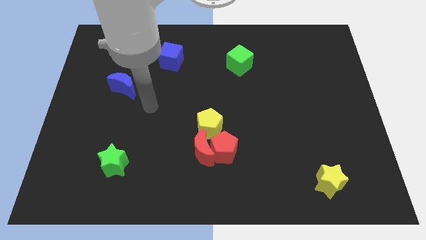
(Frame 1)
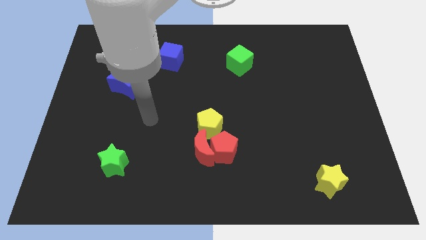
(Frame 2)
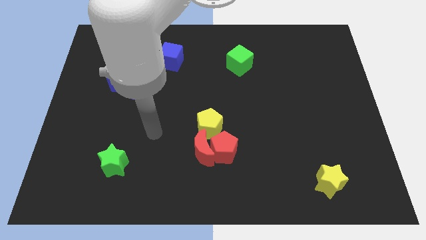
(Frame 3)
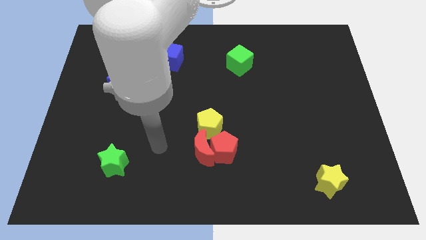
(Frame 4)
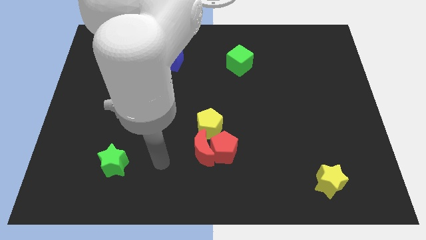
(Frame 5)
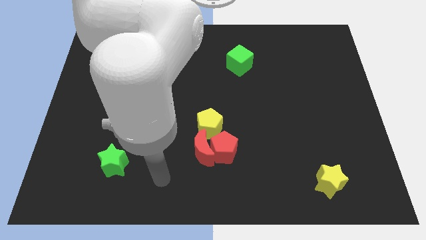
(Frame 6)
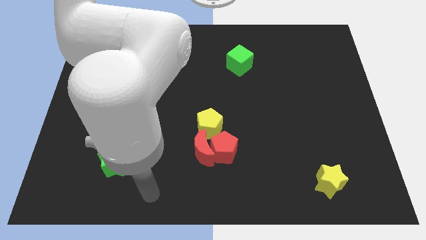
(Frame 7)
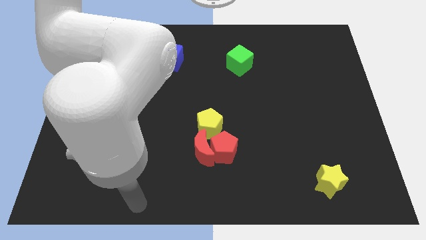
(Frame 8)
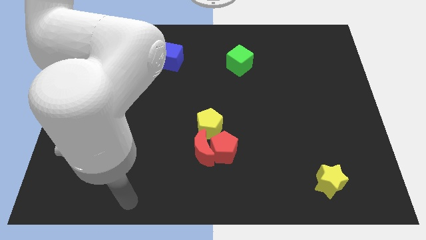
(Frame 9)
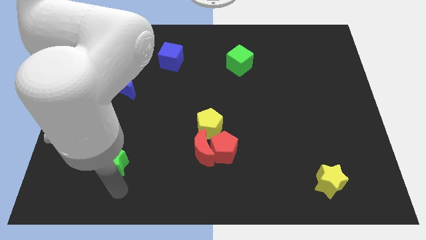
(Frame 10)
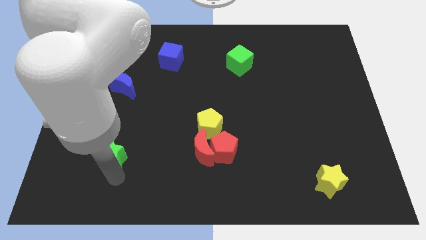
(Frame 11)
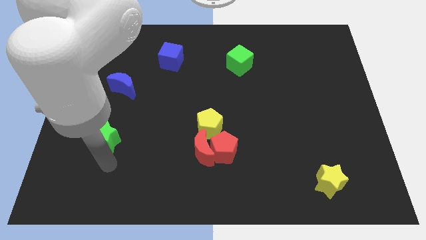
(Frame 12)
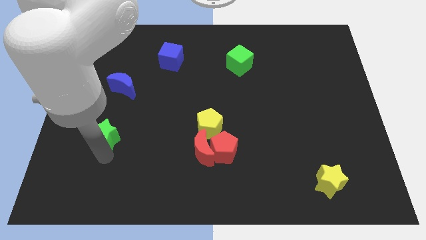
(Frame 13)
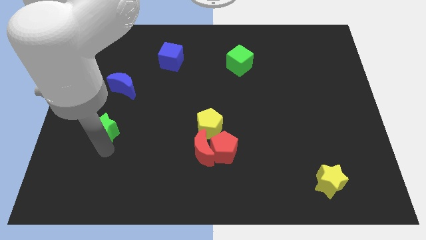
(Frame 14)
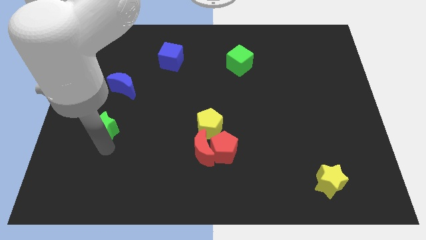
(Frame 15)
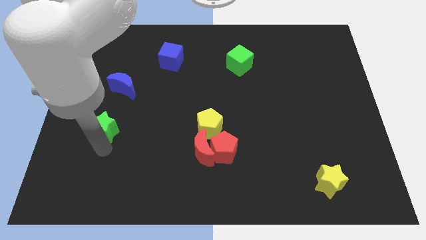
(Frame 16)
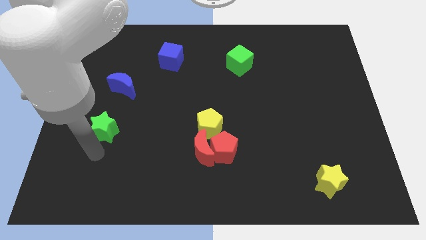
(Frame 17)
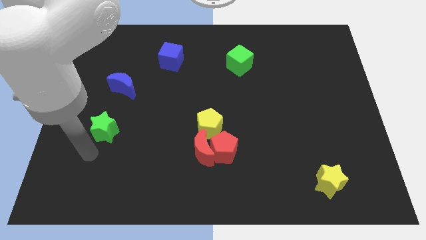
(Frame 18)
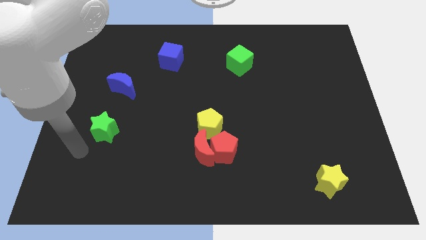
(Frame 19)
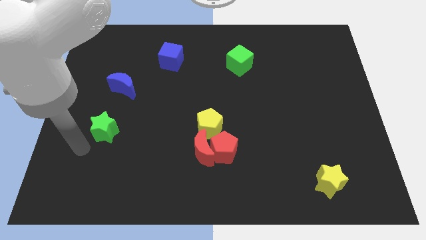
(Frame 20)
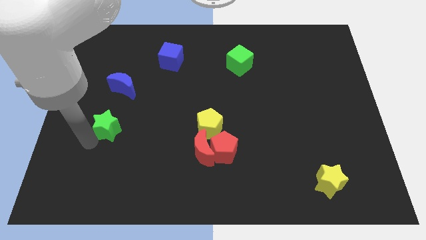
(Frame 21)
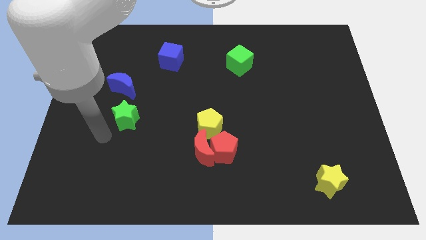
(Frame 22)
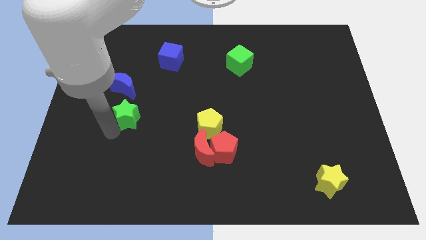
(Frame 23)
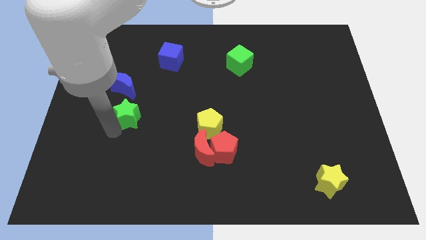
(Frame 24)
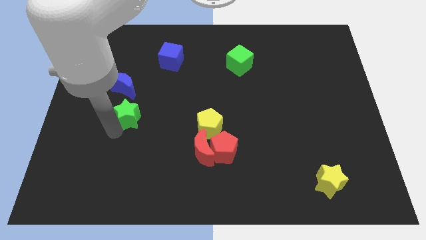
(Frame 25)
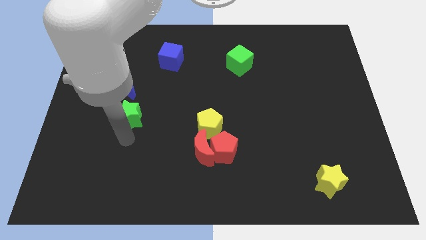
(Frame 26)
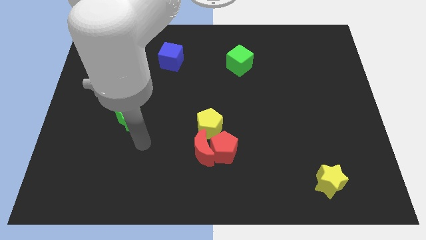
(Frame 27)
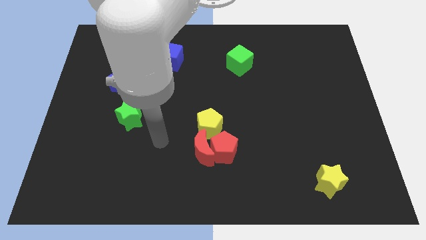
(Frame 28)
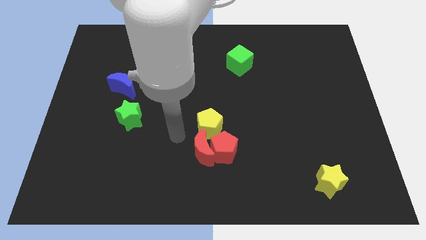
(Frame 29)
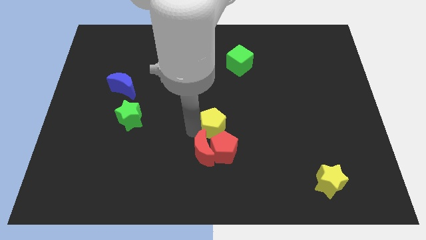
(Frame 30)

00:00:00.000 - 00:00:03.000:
push green star towards blue moon

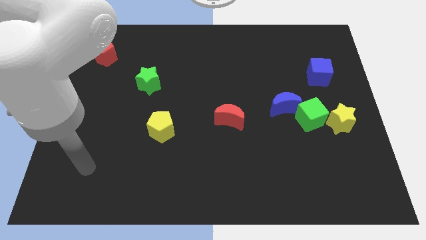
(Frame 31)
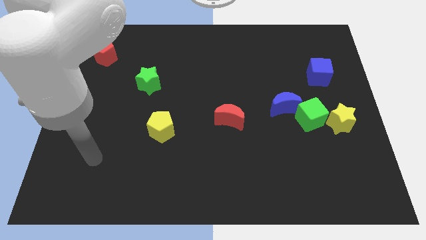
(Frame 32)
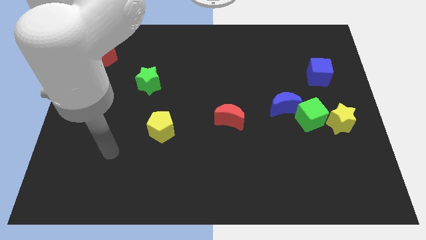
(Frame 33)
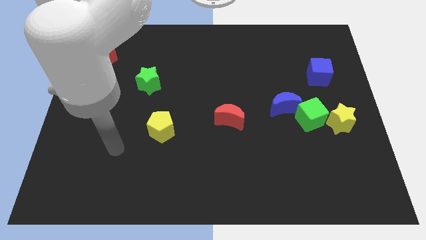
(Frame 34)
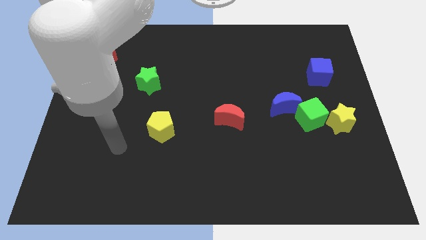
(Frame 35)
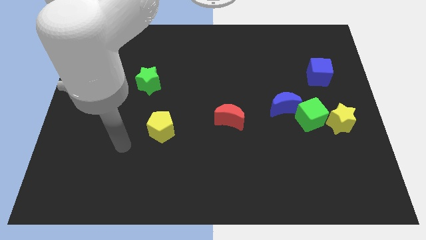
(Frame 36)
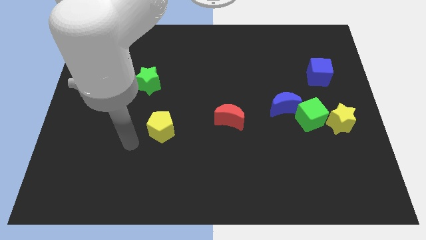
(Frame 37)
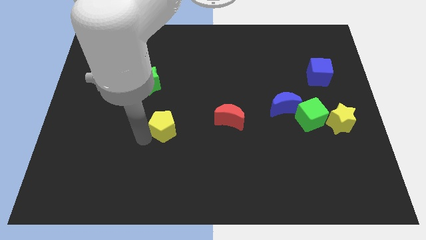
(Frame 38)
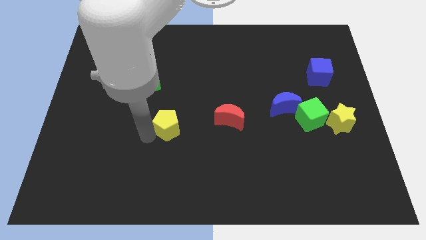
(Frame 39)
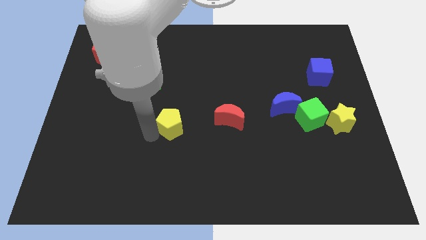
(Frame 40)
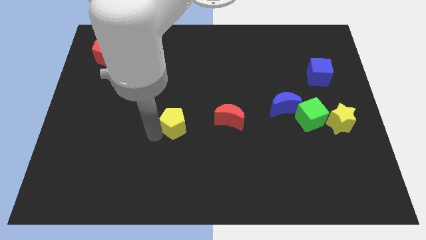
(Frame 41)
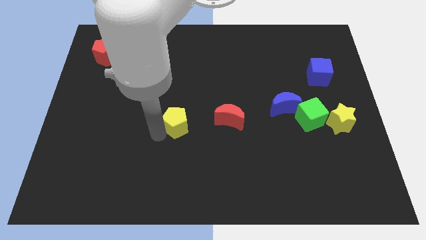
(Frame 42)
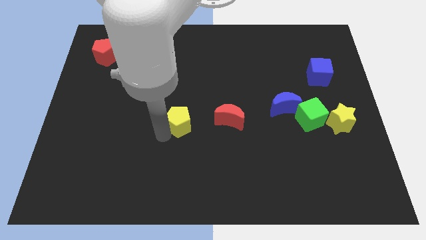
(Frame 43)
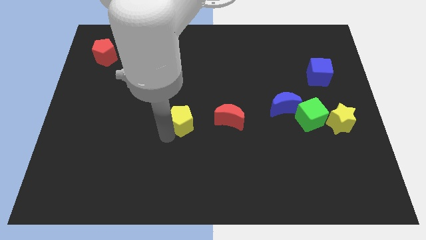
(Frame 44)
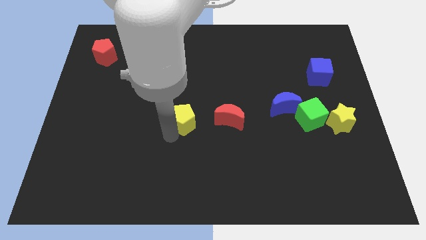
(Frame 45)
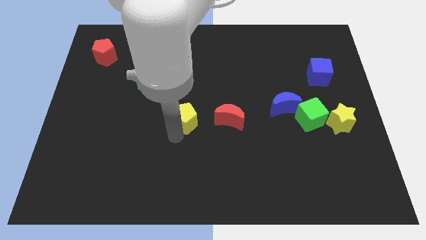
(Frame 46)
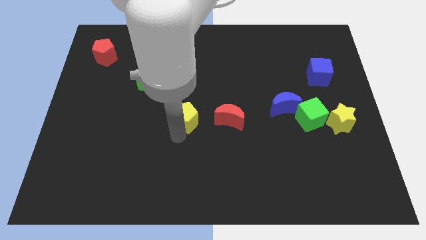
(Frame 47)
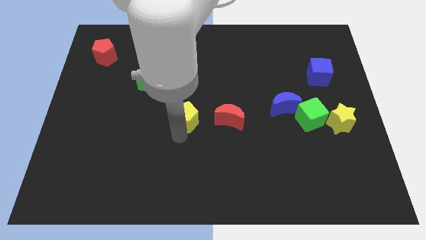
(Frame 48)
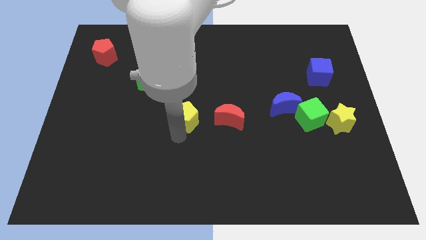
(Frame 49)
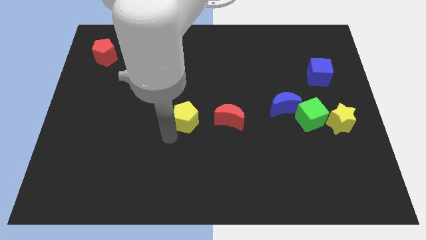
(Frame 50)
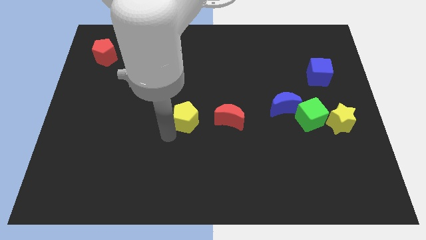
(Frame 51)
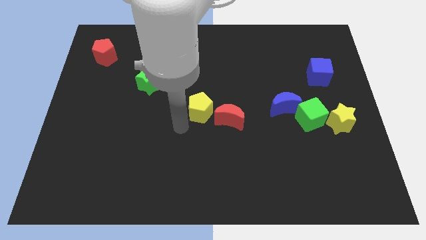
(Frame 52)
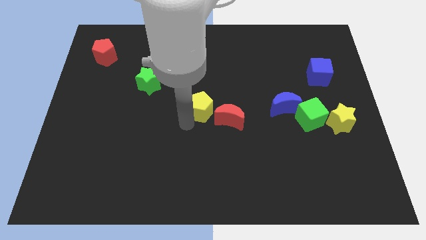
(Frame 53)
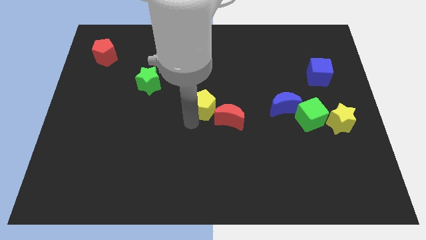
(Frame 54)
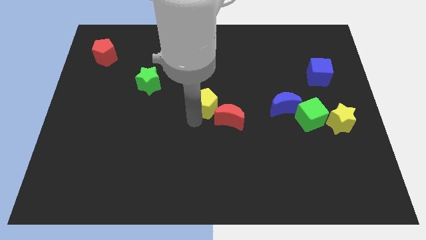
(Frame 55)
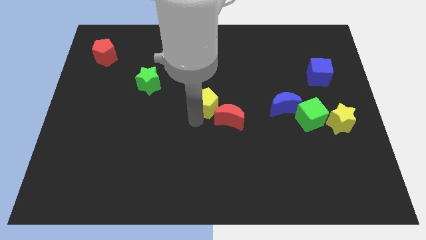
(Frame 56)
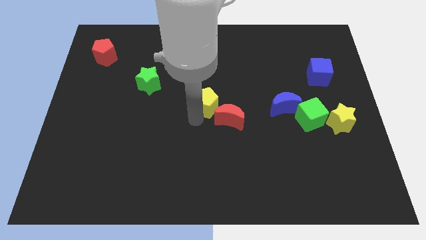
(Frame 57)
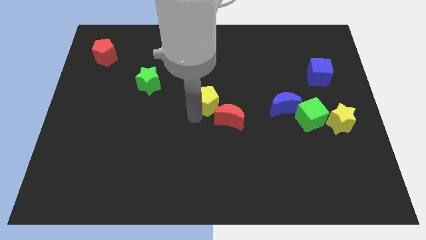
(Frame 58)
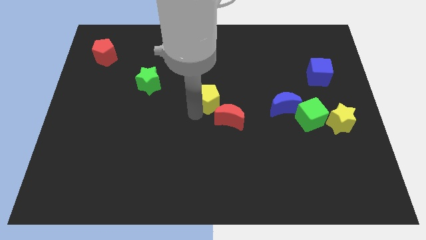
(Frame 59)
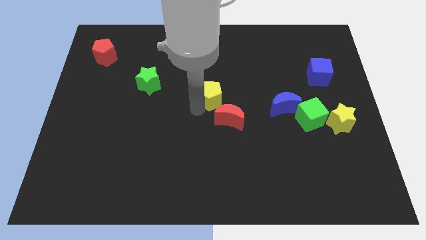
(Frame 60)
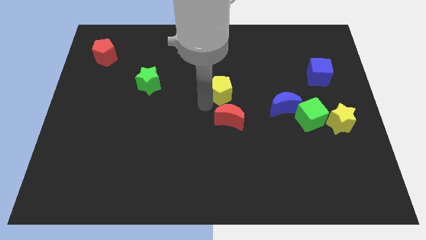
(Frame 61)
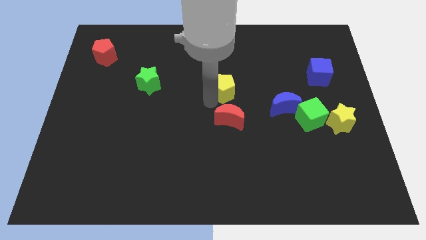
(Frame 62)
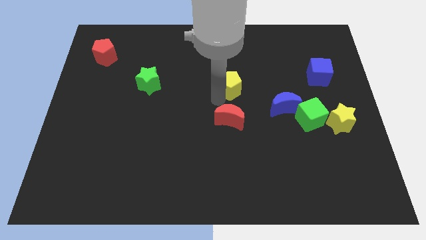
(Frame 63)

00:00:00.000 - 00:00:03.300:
move the yellow pentagon above the red crescent

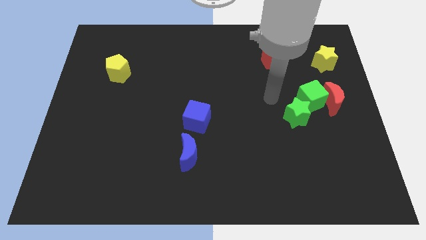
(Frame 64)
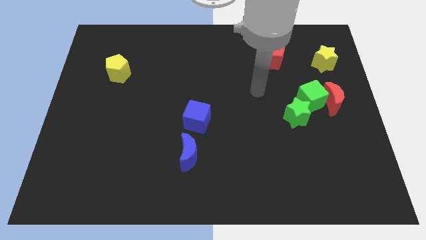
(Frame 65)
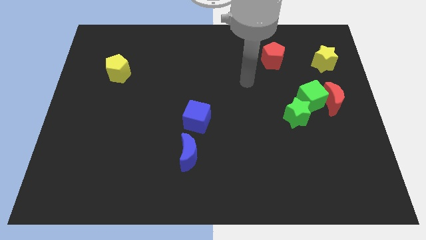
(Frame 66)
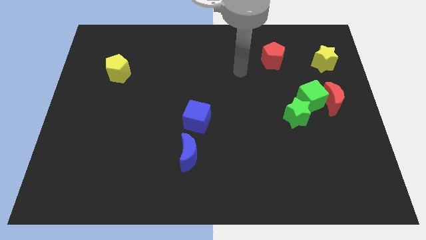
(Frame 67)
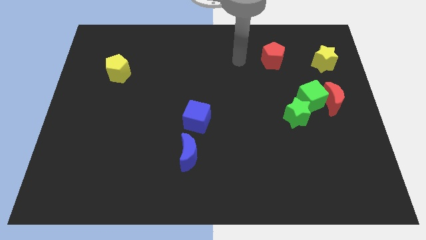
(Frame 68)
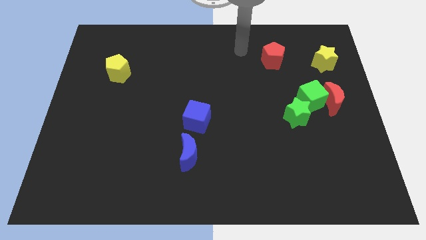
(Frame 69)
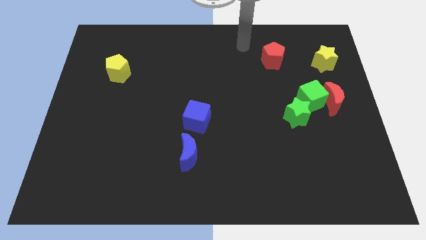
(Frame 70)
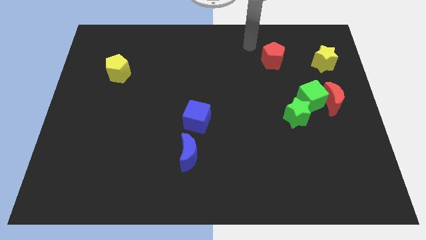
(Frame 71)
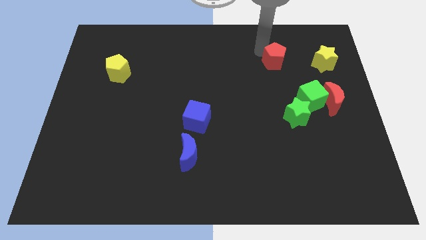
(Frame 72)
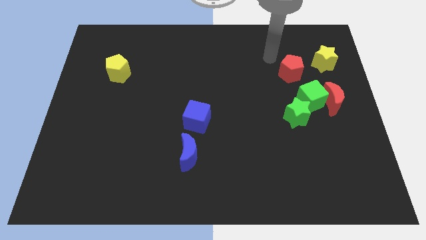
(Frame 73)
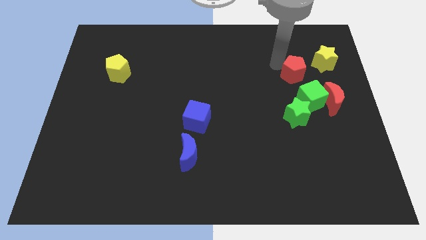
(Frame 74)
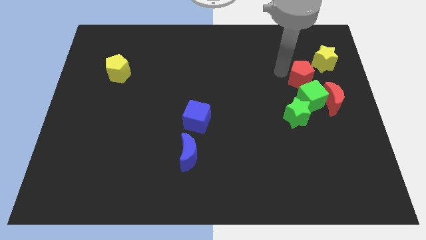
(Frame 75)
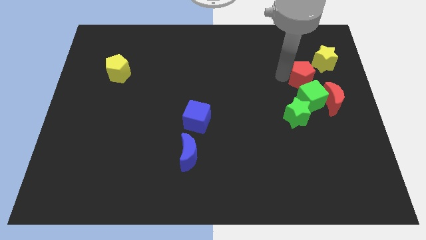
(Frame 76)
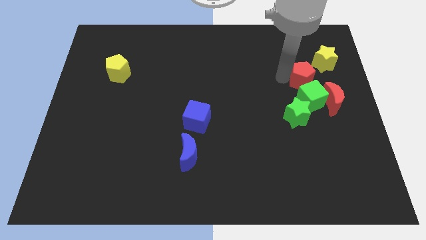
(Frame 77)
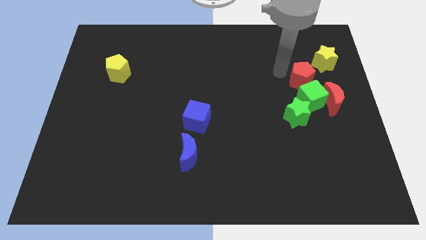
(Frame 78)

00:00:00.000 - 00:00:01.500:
push the red pentagon towards green cube

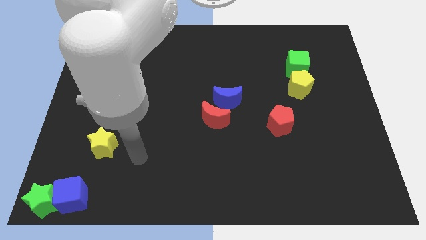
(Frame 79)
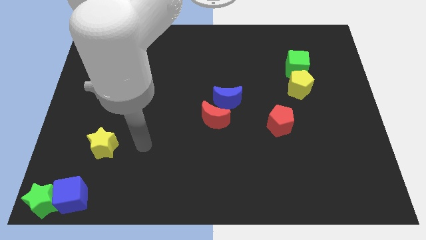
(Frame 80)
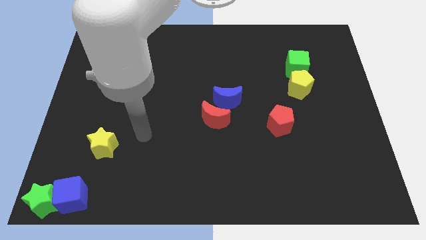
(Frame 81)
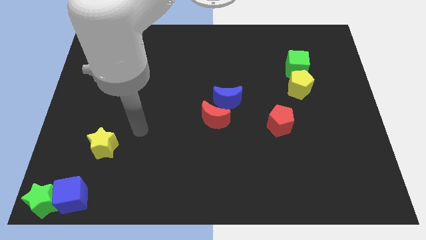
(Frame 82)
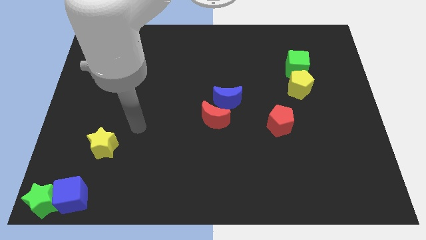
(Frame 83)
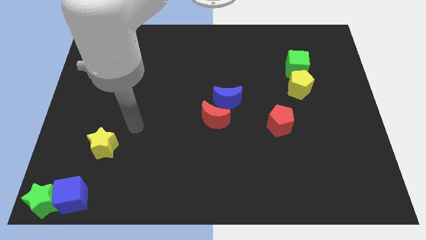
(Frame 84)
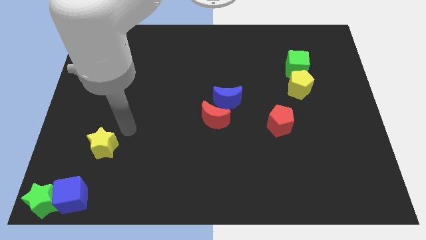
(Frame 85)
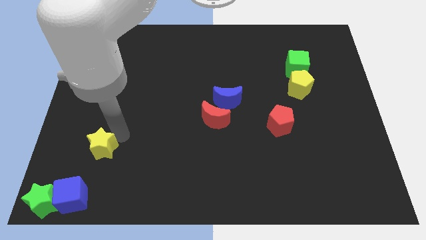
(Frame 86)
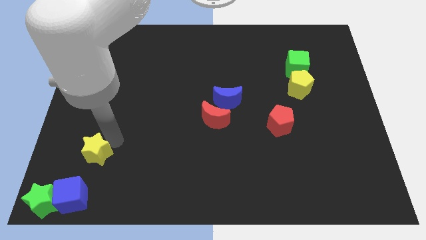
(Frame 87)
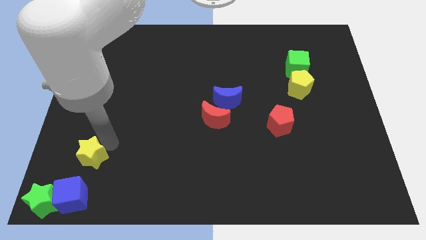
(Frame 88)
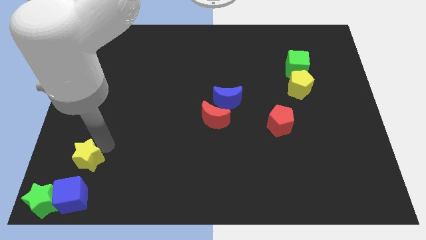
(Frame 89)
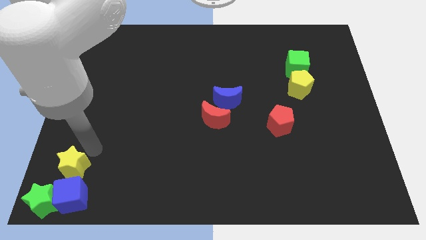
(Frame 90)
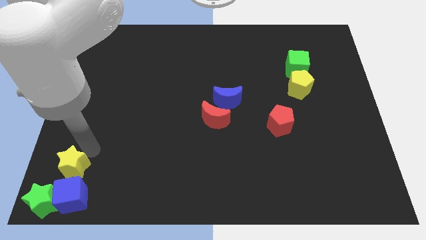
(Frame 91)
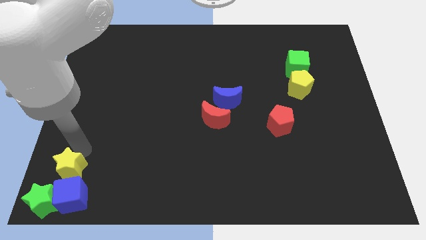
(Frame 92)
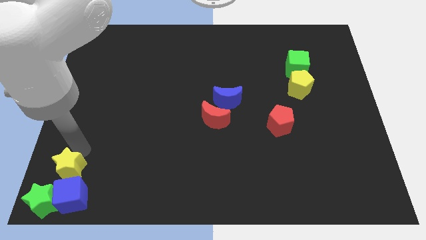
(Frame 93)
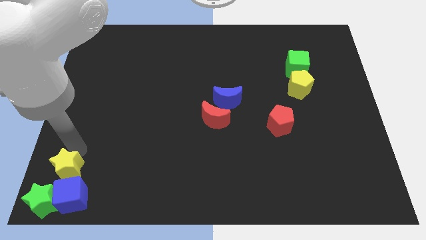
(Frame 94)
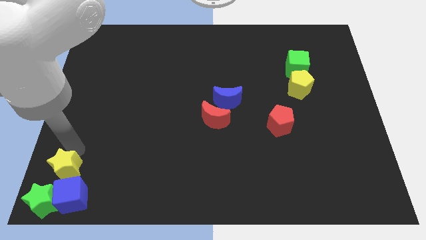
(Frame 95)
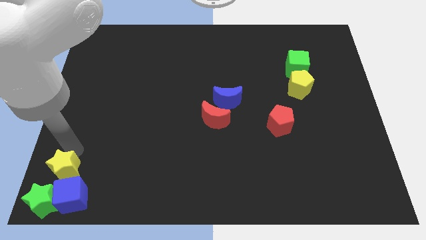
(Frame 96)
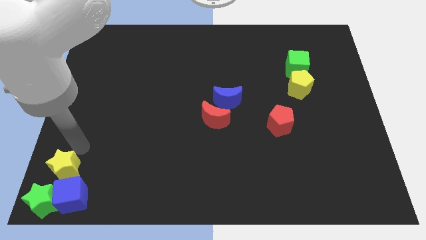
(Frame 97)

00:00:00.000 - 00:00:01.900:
push yellow star towards blue cube
